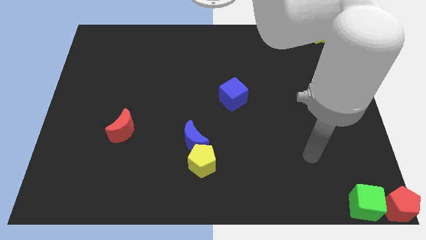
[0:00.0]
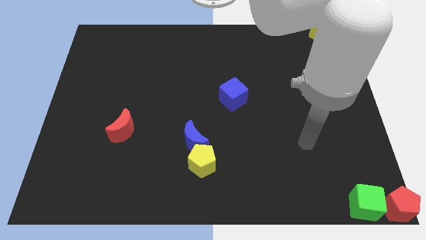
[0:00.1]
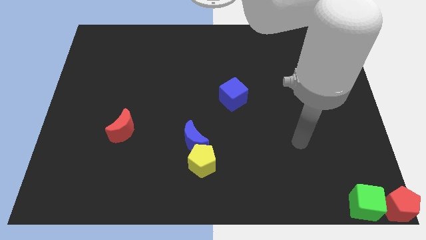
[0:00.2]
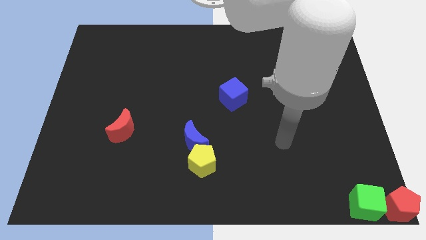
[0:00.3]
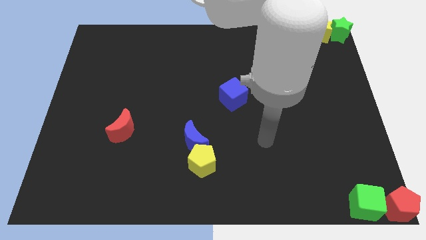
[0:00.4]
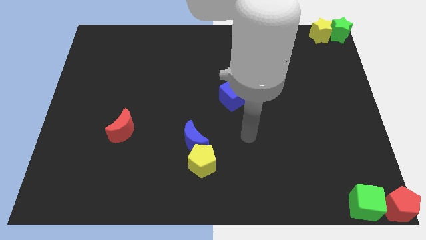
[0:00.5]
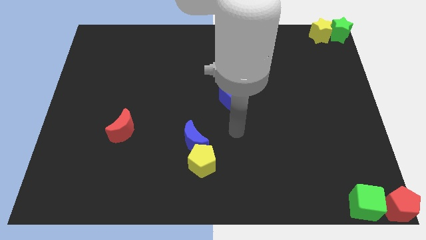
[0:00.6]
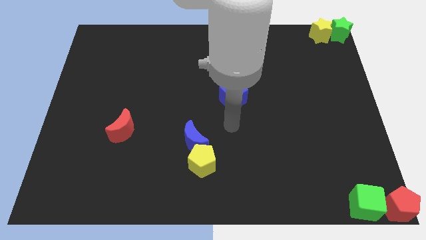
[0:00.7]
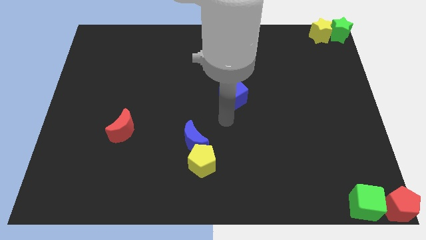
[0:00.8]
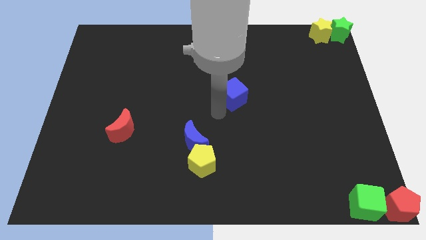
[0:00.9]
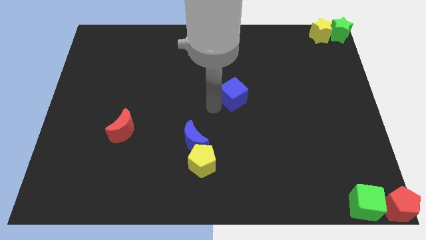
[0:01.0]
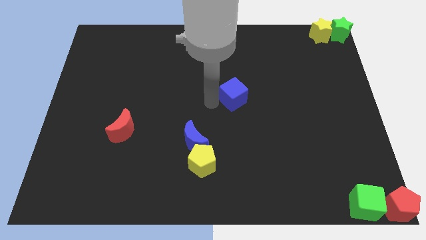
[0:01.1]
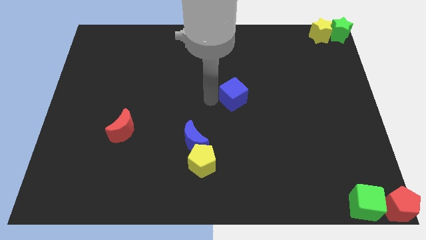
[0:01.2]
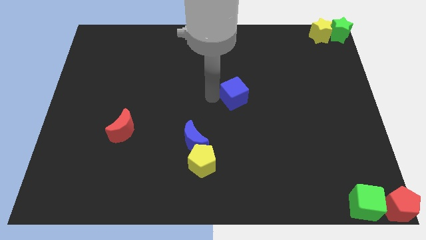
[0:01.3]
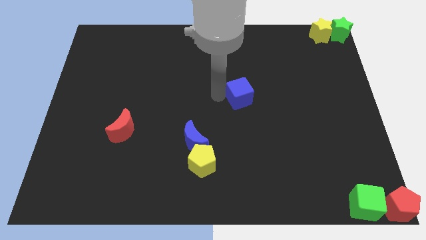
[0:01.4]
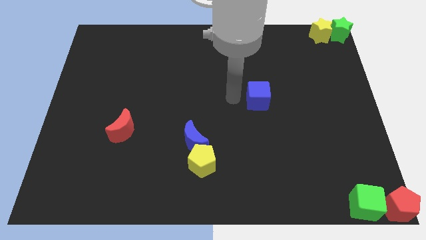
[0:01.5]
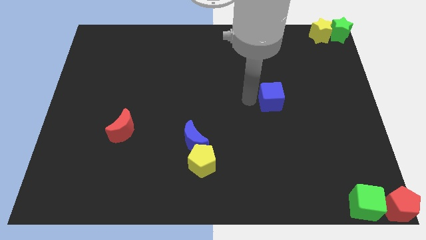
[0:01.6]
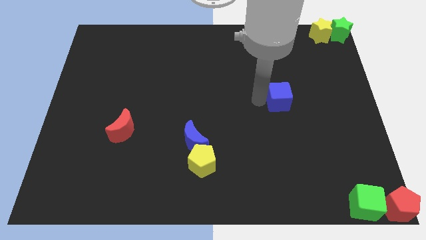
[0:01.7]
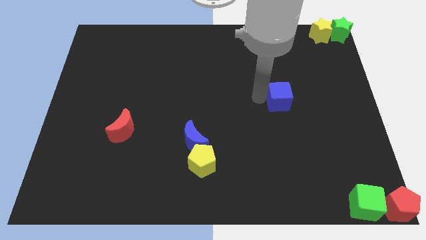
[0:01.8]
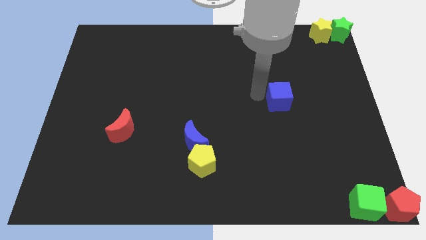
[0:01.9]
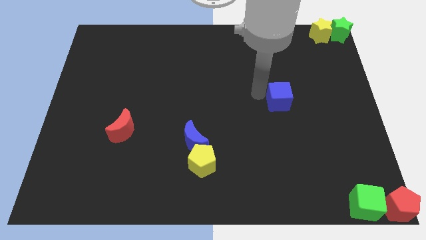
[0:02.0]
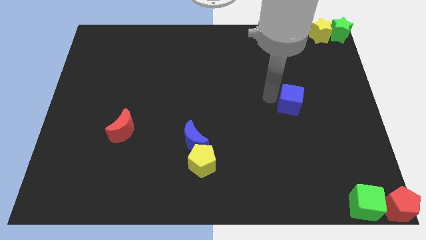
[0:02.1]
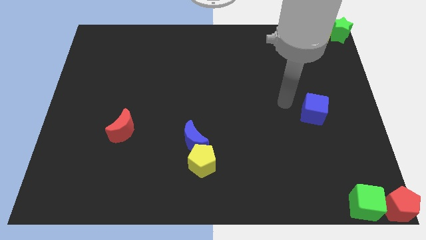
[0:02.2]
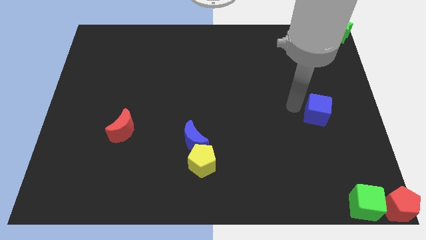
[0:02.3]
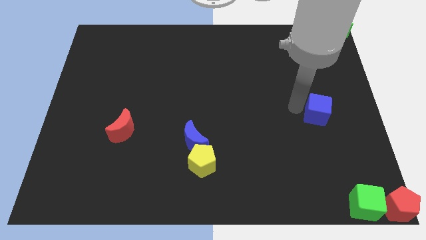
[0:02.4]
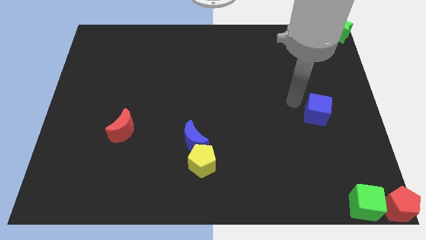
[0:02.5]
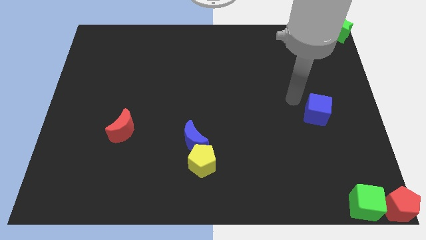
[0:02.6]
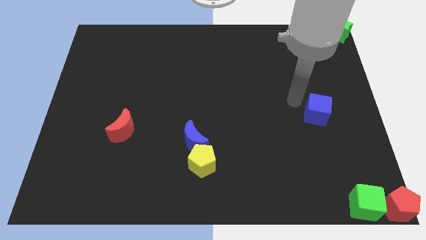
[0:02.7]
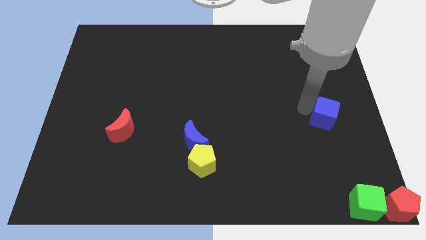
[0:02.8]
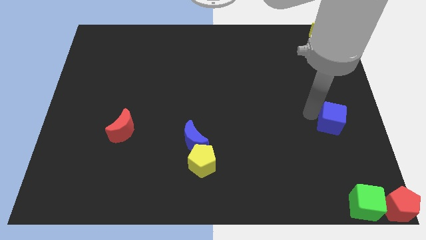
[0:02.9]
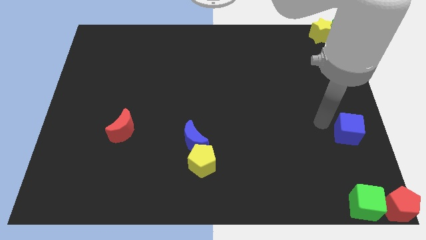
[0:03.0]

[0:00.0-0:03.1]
place the blue cube in between the green cube and yellow star

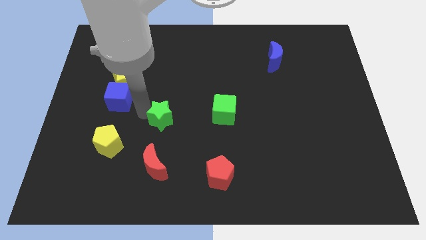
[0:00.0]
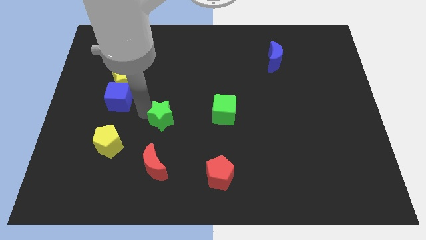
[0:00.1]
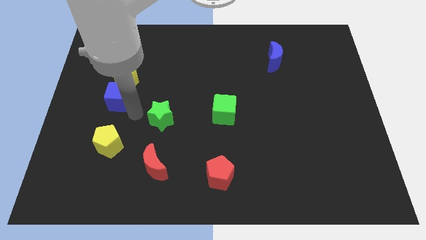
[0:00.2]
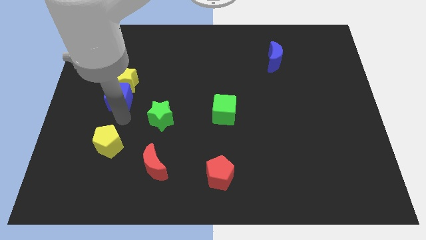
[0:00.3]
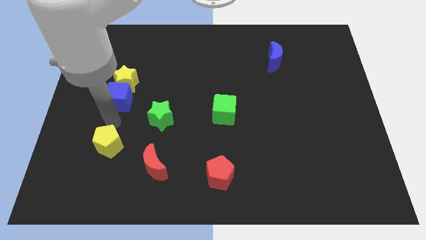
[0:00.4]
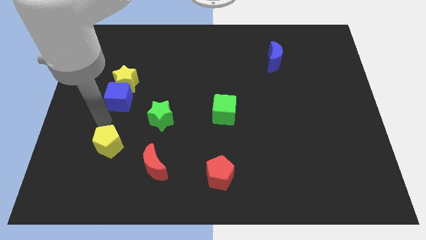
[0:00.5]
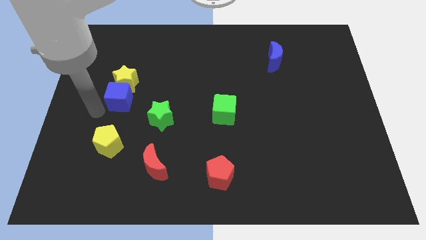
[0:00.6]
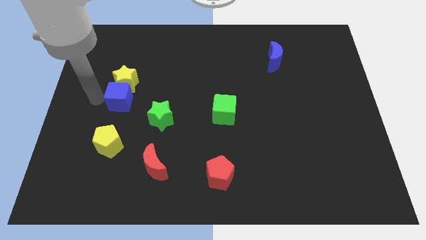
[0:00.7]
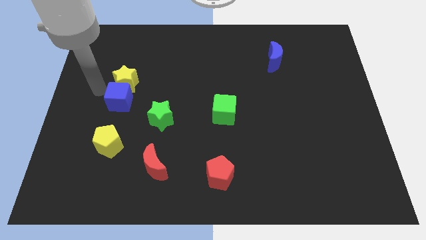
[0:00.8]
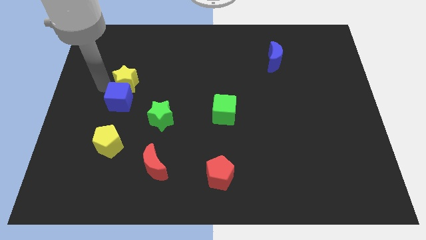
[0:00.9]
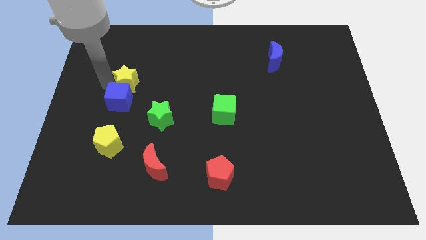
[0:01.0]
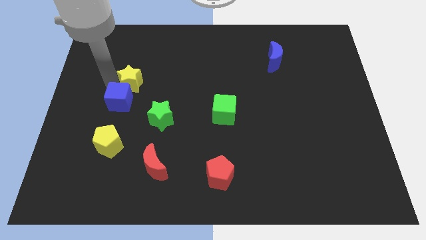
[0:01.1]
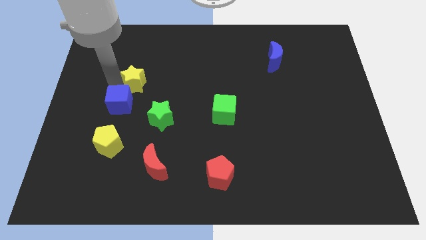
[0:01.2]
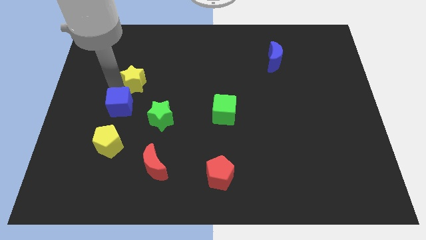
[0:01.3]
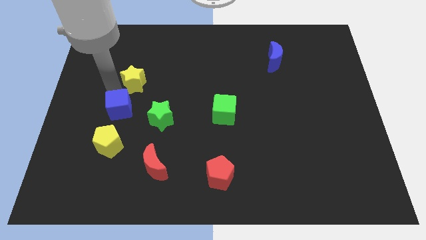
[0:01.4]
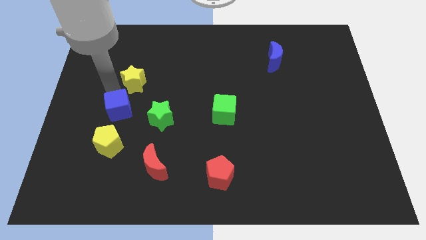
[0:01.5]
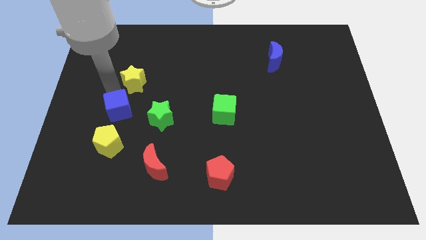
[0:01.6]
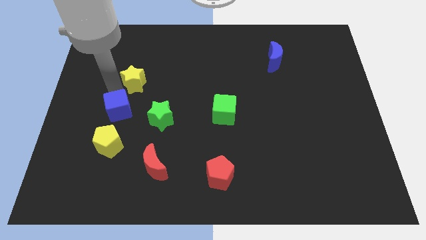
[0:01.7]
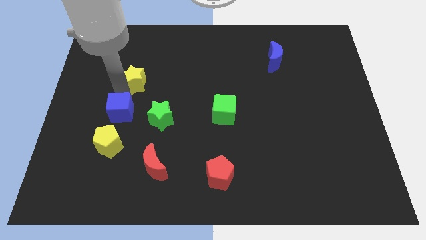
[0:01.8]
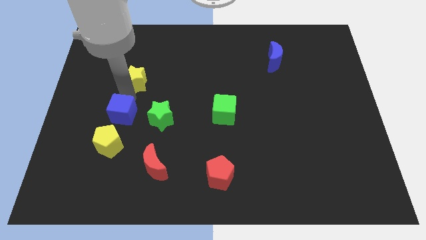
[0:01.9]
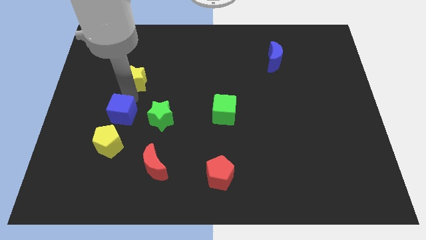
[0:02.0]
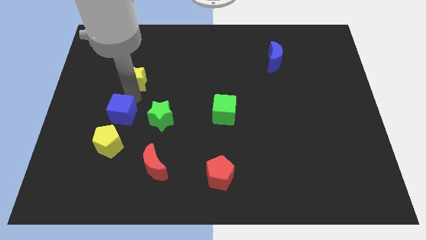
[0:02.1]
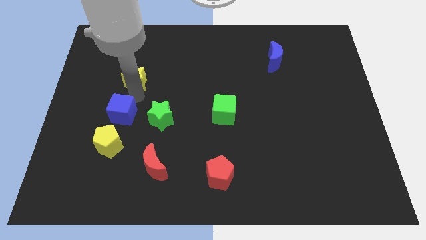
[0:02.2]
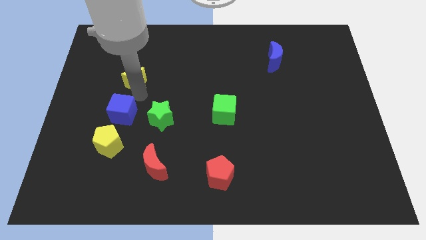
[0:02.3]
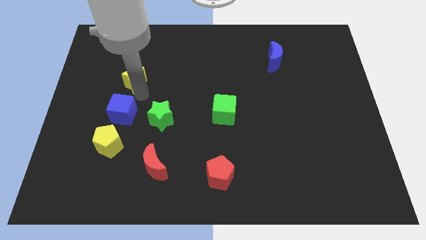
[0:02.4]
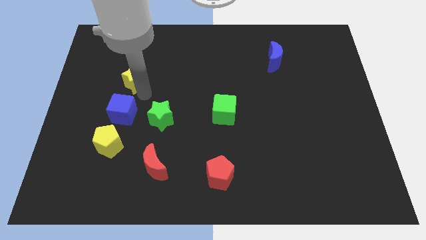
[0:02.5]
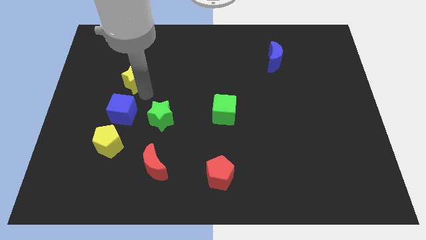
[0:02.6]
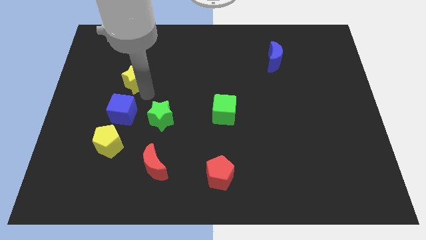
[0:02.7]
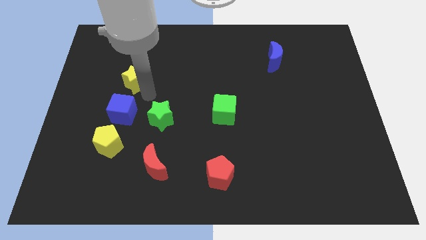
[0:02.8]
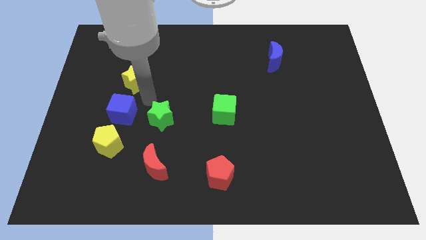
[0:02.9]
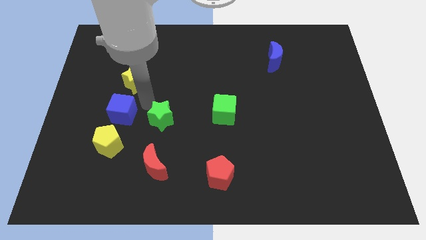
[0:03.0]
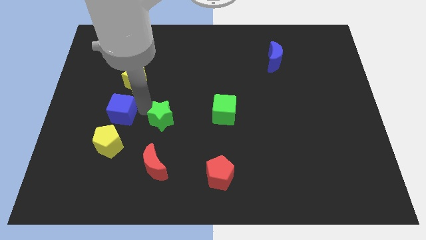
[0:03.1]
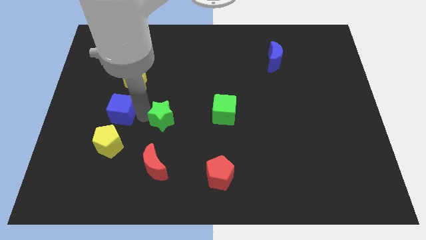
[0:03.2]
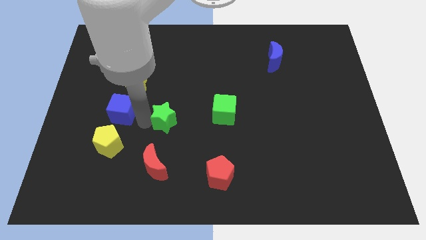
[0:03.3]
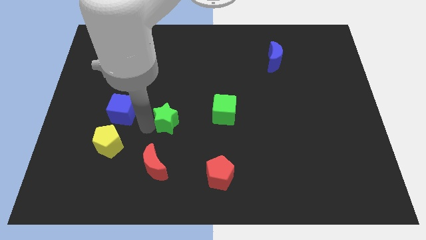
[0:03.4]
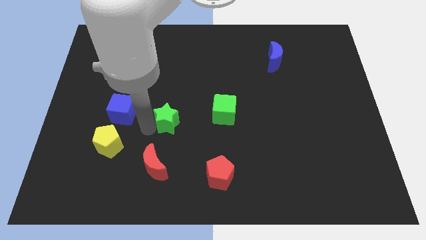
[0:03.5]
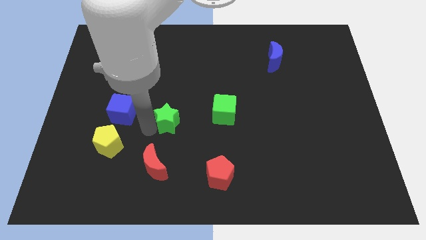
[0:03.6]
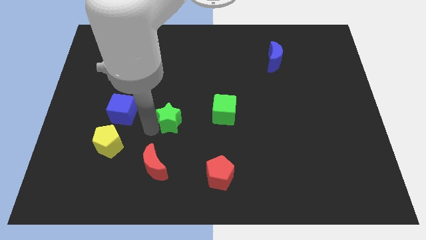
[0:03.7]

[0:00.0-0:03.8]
push green star above red crescent

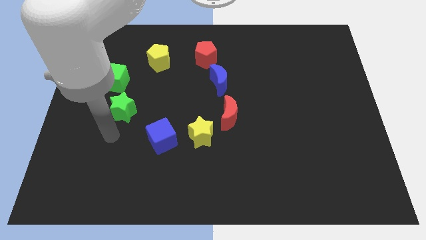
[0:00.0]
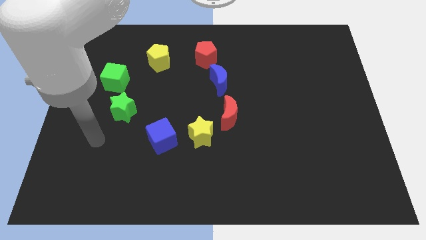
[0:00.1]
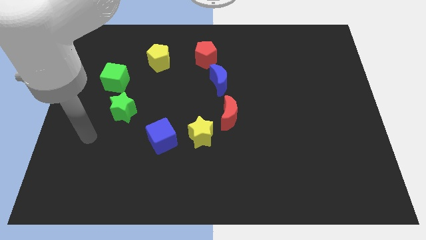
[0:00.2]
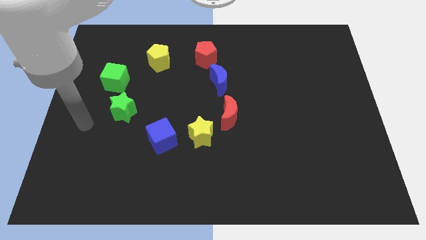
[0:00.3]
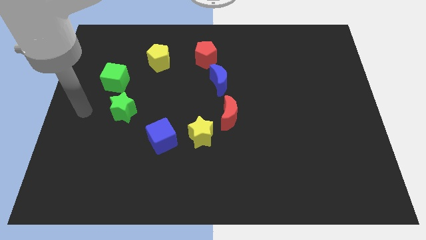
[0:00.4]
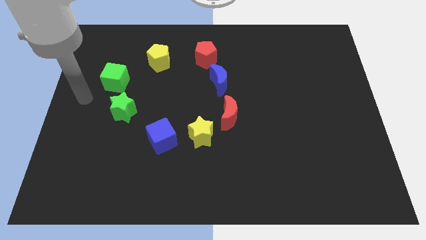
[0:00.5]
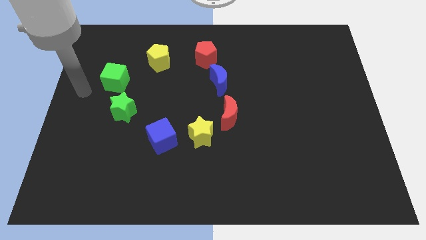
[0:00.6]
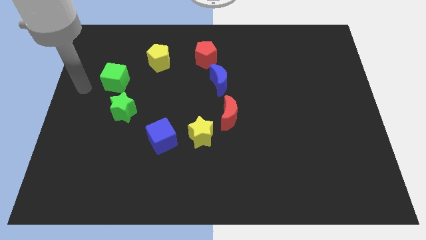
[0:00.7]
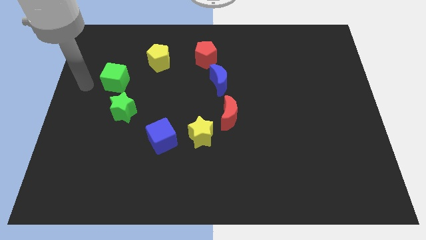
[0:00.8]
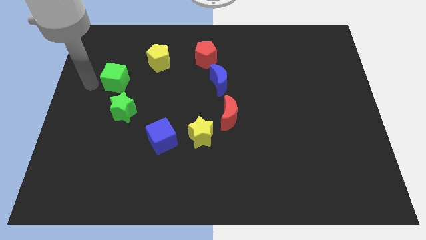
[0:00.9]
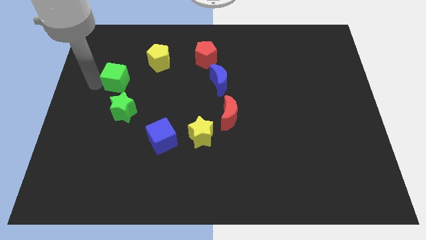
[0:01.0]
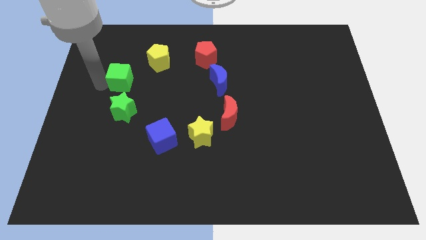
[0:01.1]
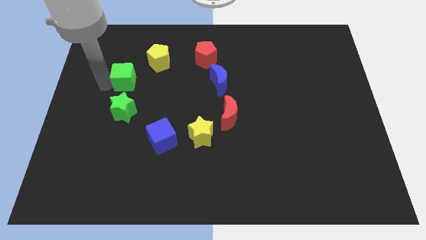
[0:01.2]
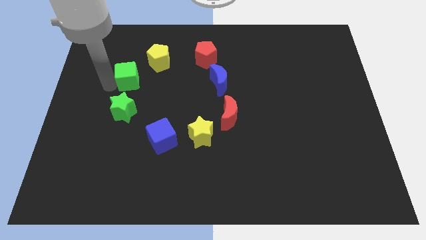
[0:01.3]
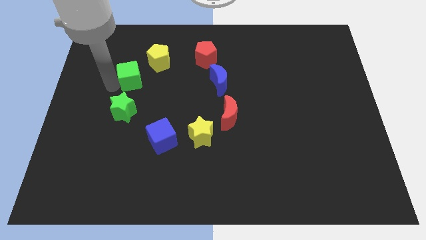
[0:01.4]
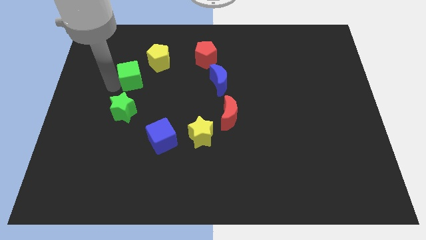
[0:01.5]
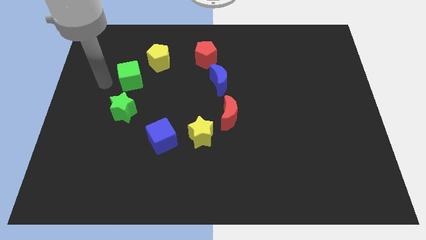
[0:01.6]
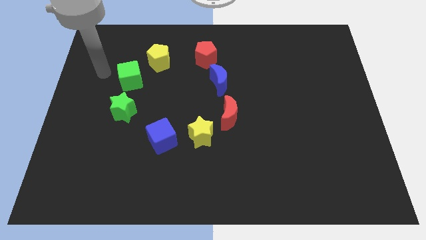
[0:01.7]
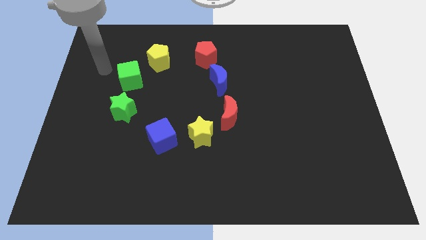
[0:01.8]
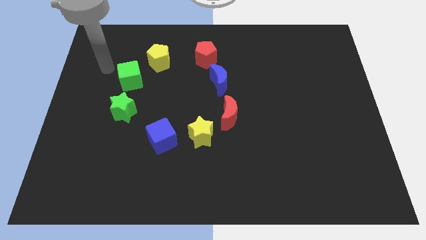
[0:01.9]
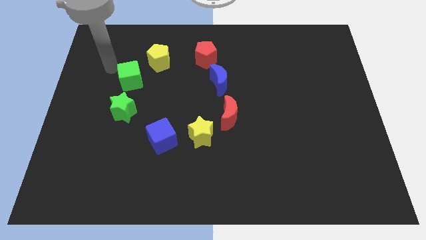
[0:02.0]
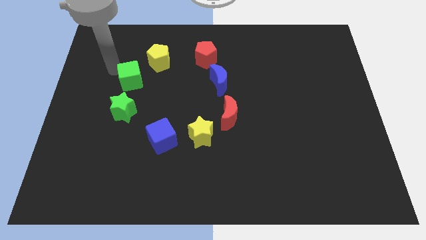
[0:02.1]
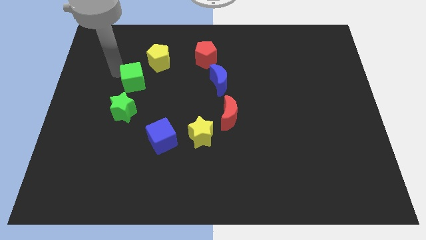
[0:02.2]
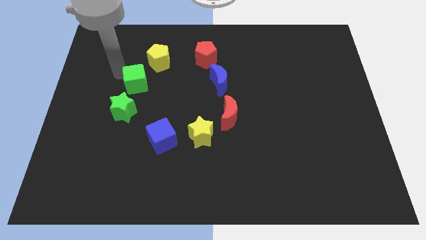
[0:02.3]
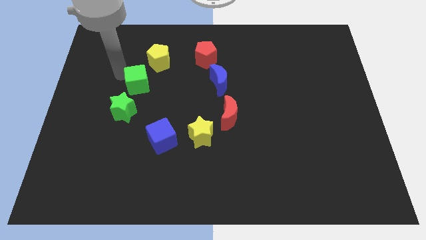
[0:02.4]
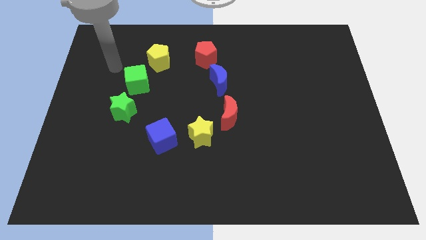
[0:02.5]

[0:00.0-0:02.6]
move green cube left below the yellow pentagon
